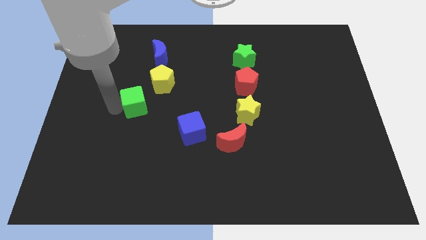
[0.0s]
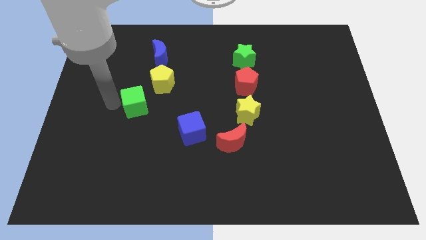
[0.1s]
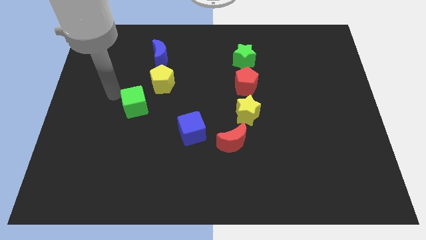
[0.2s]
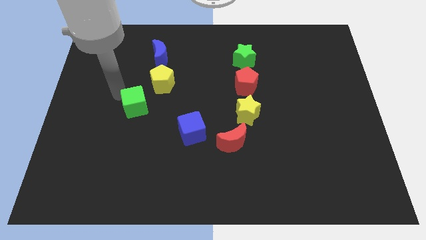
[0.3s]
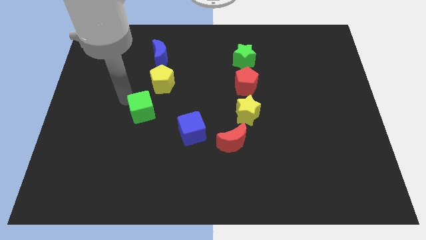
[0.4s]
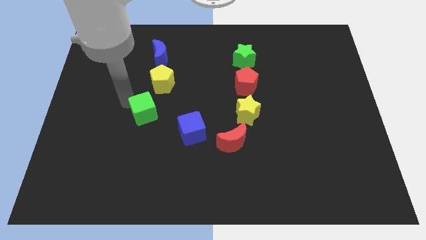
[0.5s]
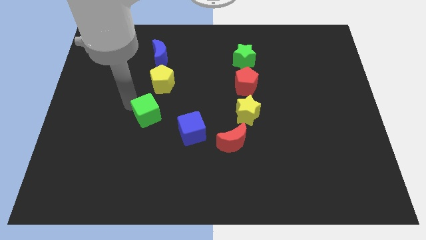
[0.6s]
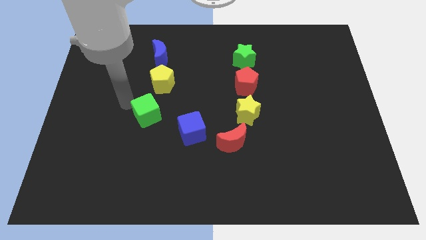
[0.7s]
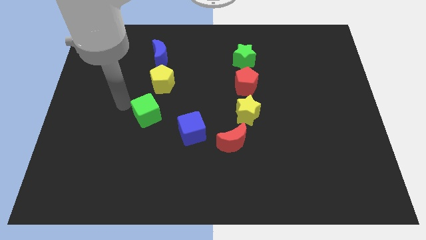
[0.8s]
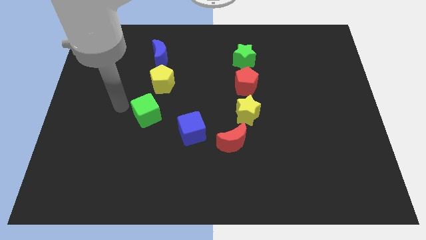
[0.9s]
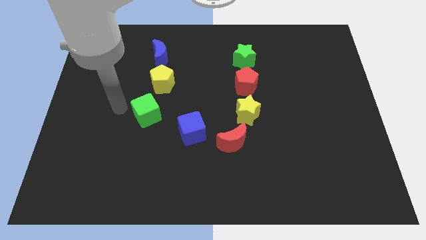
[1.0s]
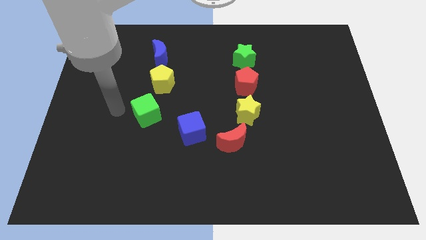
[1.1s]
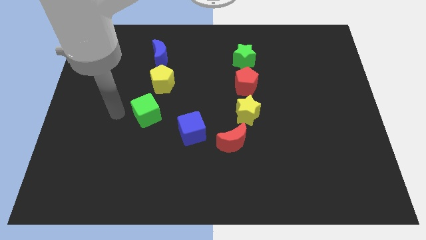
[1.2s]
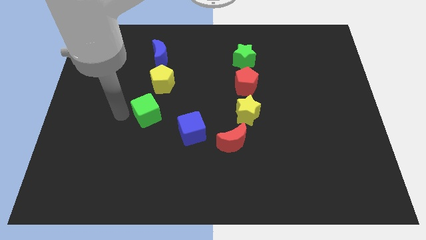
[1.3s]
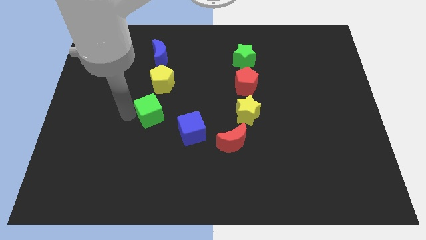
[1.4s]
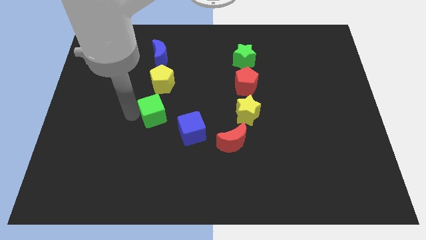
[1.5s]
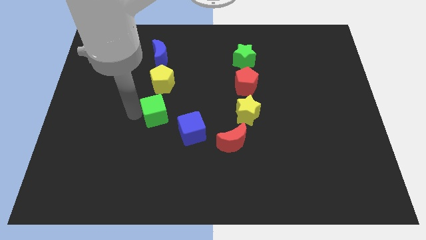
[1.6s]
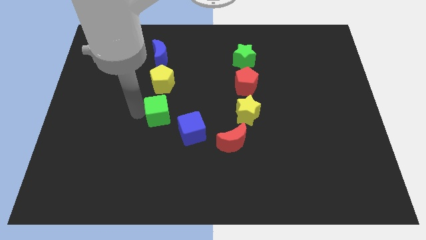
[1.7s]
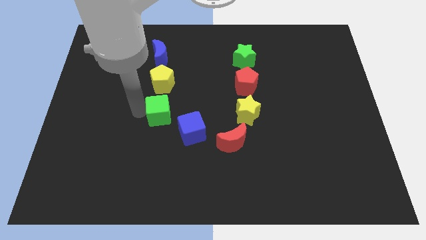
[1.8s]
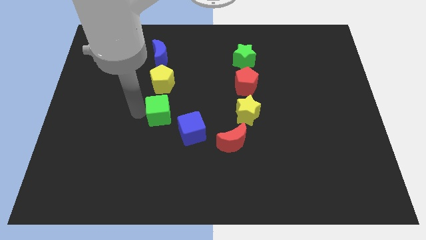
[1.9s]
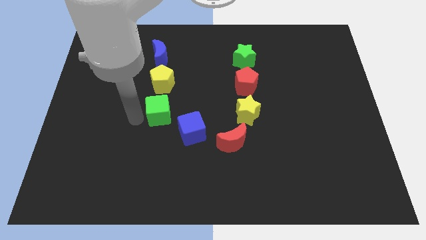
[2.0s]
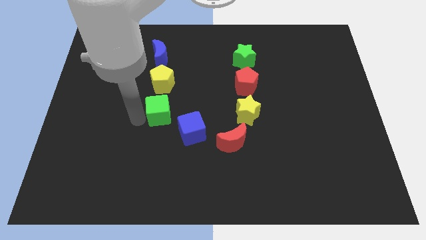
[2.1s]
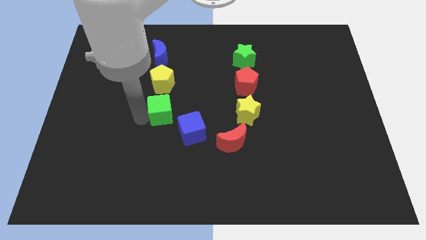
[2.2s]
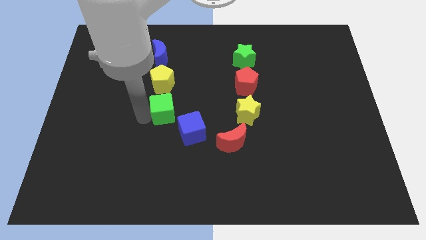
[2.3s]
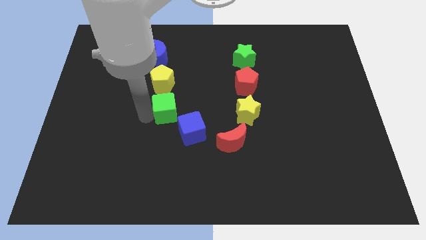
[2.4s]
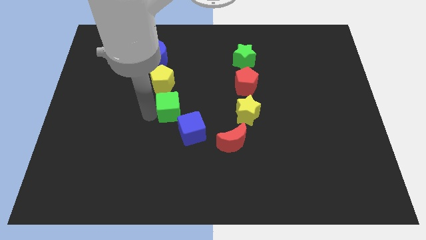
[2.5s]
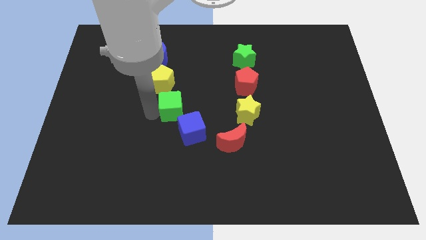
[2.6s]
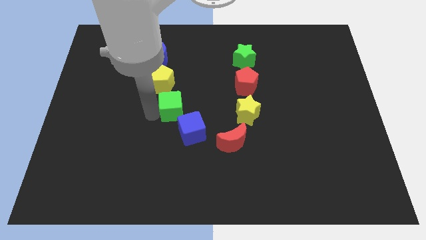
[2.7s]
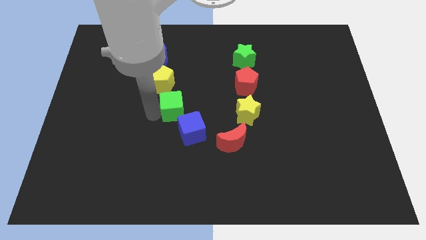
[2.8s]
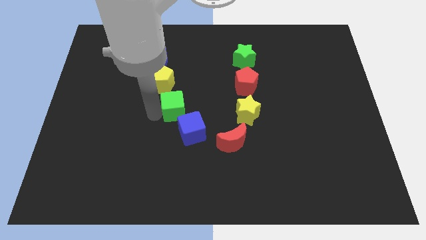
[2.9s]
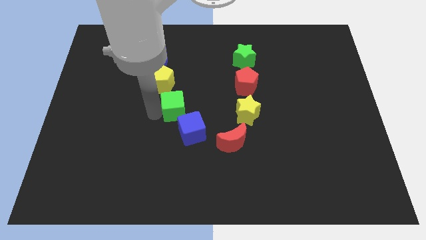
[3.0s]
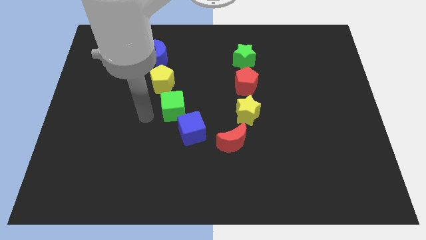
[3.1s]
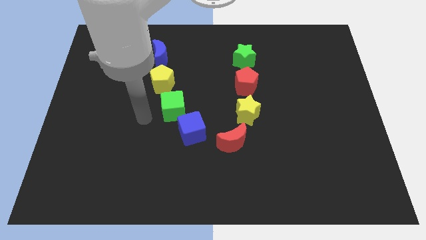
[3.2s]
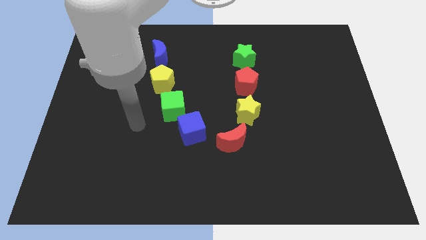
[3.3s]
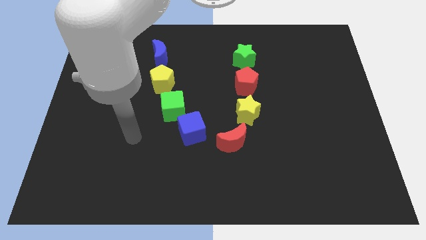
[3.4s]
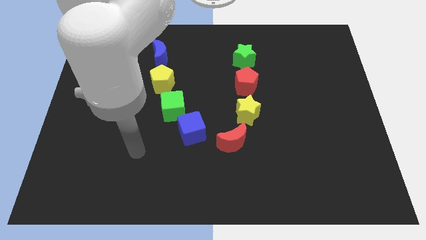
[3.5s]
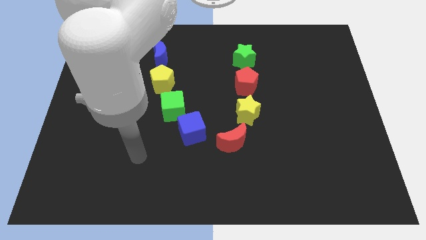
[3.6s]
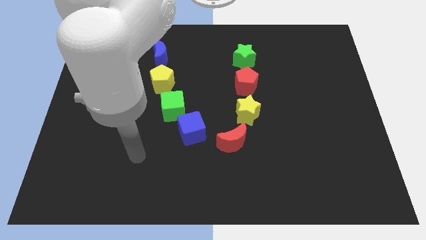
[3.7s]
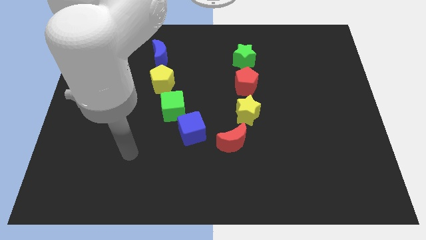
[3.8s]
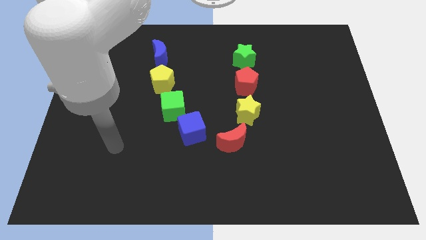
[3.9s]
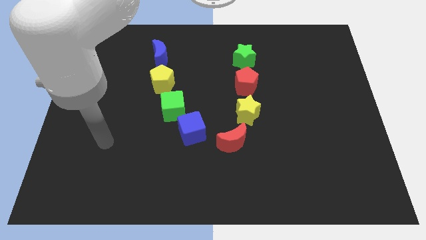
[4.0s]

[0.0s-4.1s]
place green cube in between blue cube and yellow pentagon

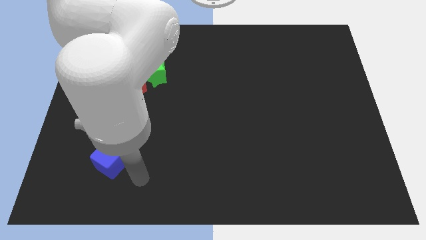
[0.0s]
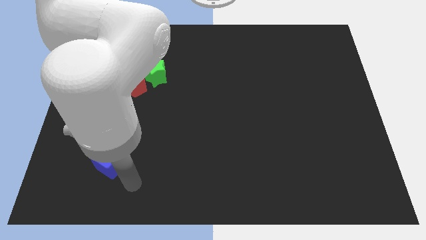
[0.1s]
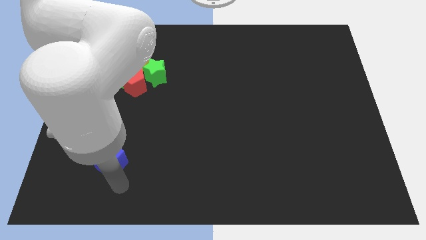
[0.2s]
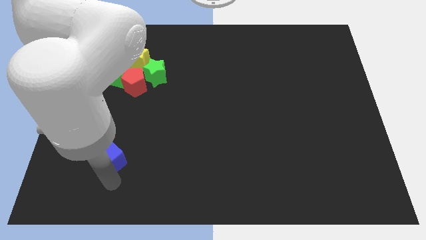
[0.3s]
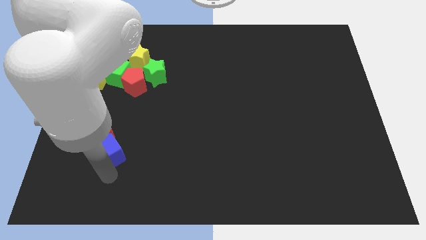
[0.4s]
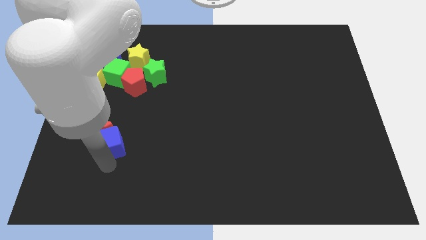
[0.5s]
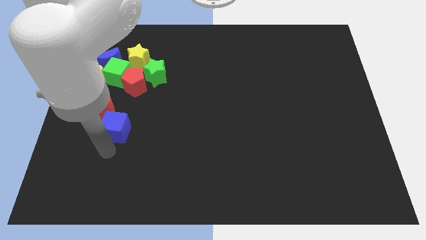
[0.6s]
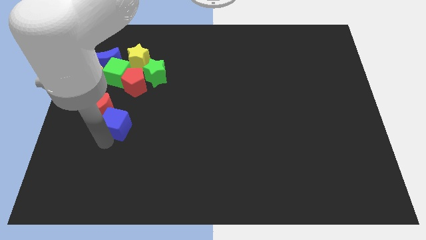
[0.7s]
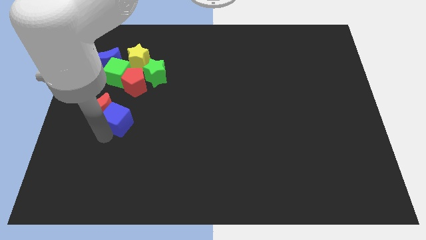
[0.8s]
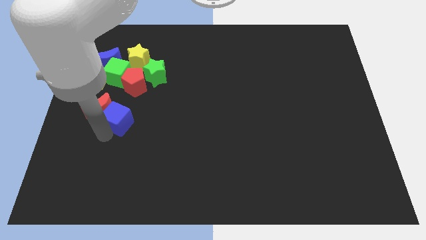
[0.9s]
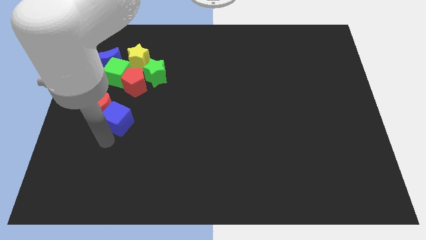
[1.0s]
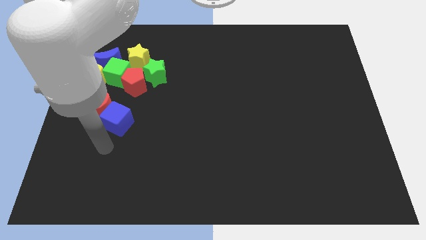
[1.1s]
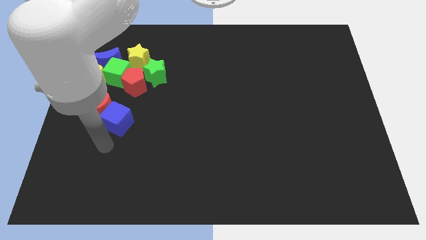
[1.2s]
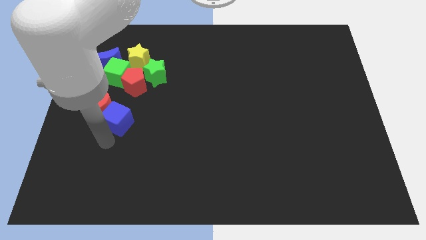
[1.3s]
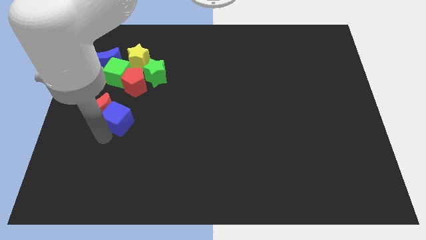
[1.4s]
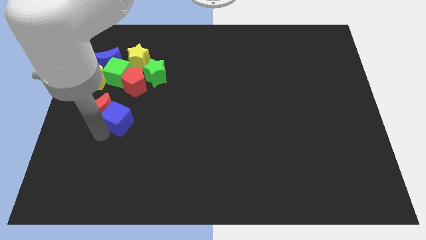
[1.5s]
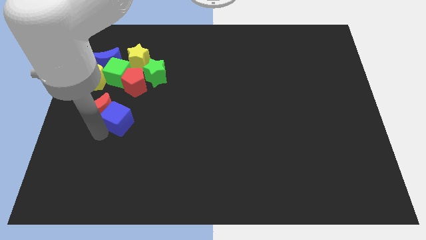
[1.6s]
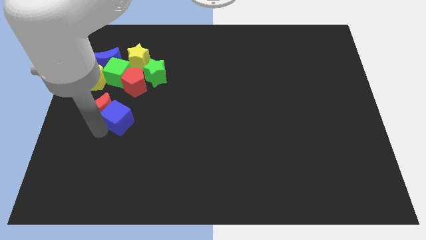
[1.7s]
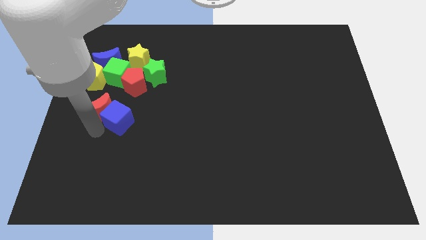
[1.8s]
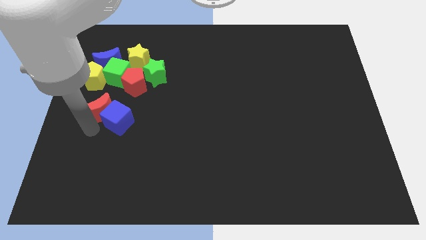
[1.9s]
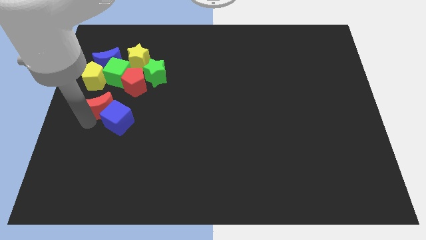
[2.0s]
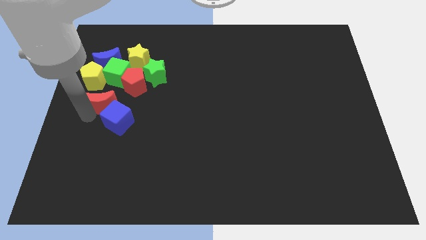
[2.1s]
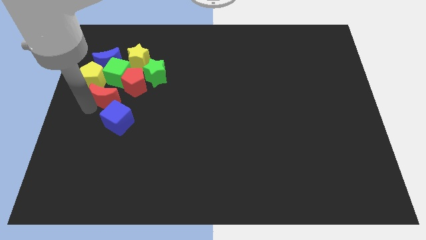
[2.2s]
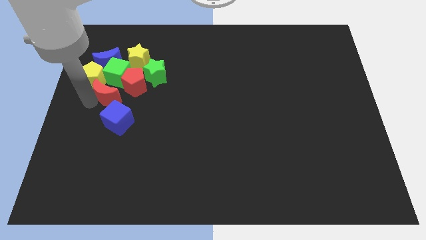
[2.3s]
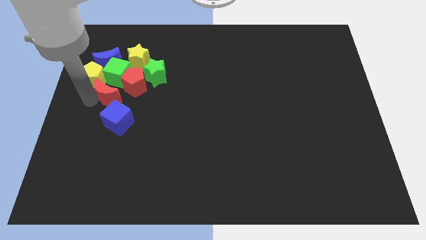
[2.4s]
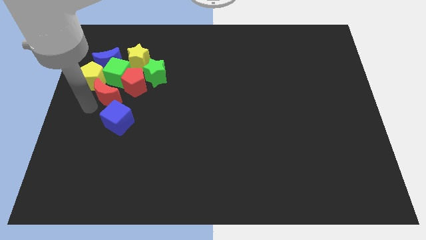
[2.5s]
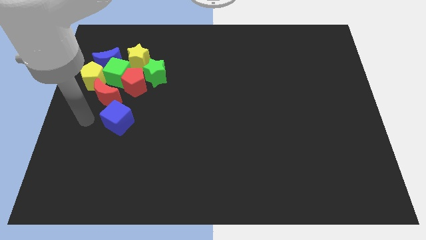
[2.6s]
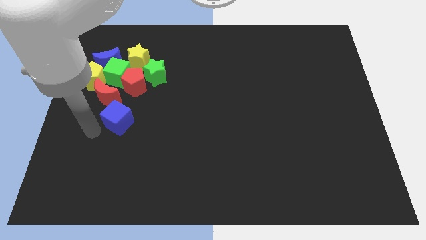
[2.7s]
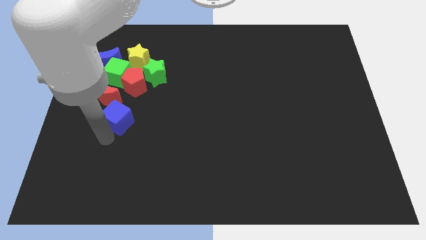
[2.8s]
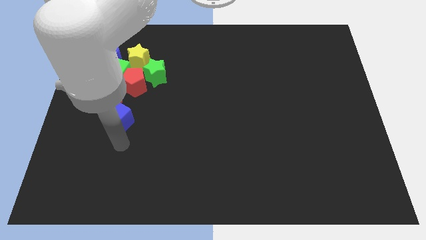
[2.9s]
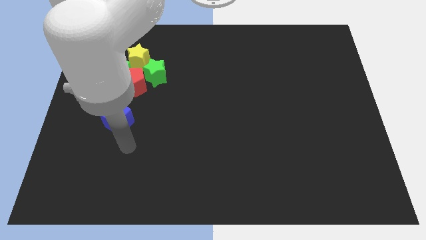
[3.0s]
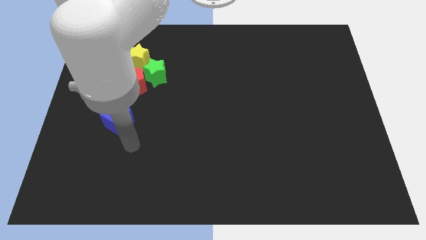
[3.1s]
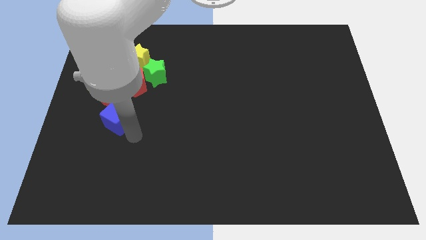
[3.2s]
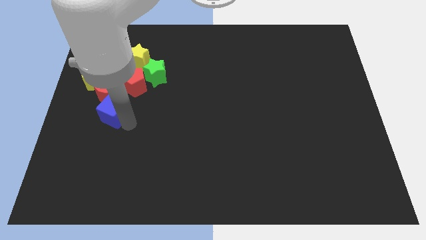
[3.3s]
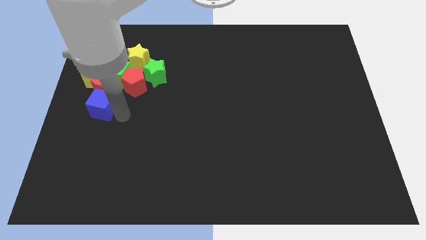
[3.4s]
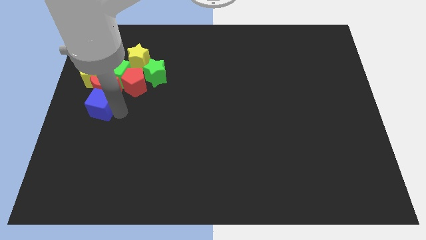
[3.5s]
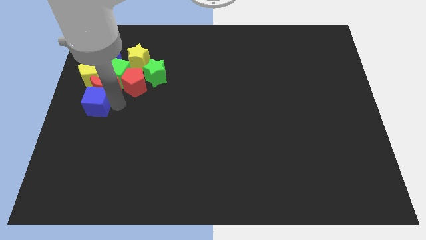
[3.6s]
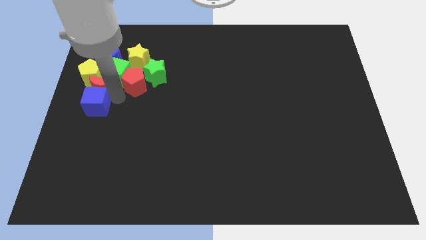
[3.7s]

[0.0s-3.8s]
push the blue cube into the red crescent

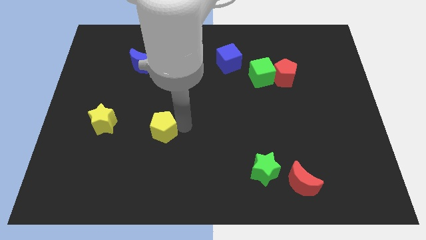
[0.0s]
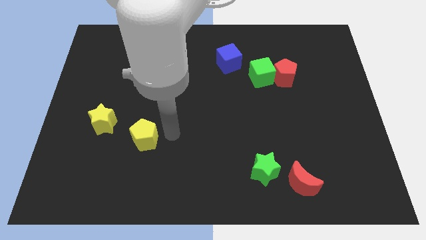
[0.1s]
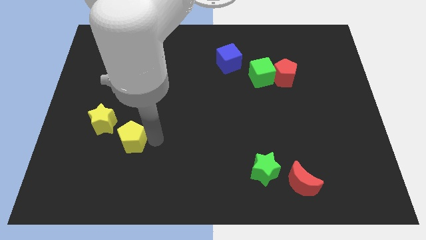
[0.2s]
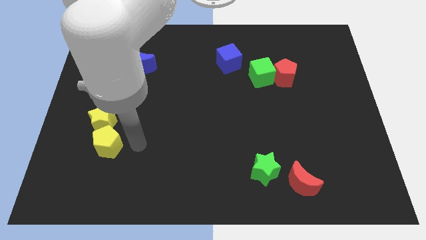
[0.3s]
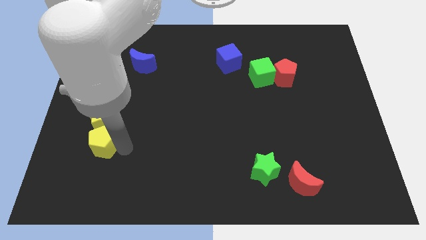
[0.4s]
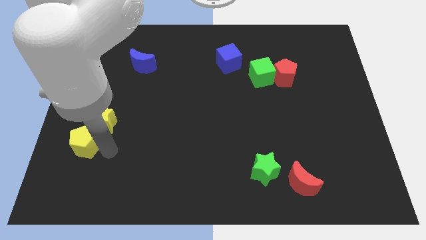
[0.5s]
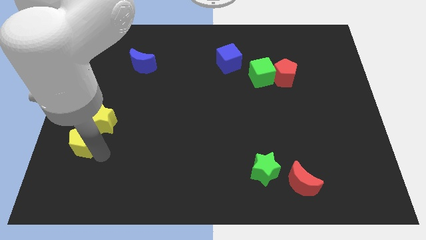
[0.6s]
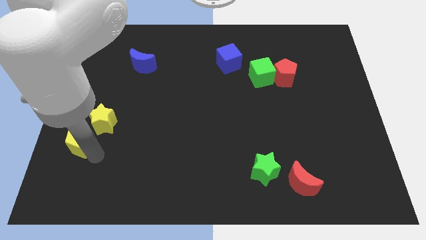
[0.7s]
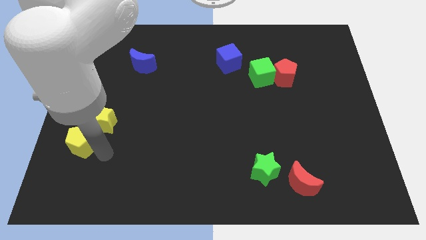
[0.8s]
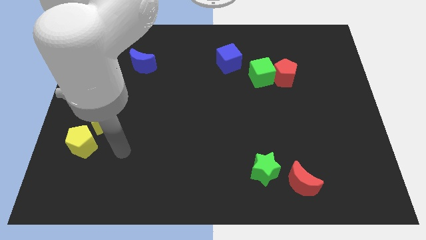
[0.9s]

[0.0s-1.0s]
place the yellow pentagon to the bottom left of the yellow star

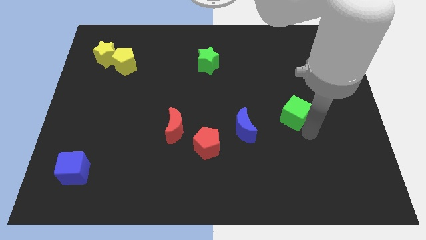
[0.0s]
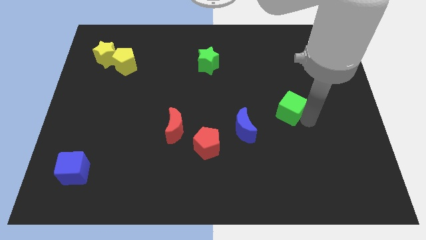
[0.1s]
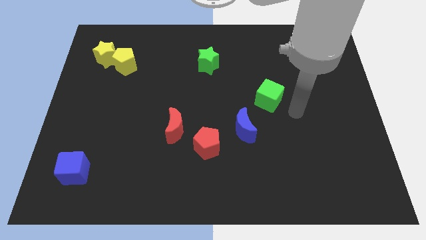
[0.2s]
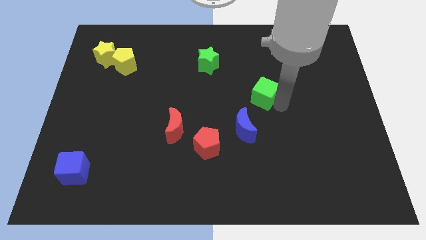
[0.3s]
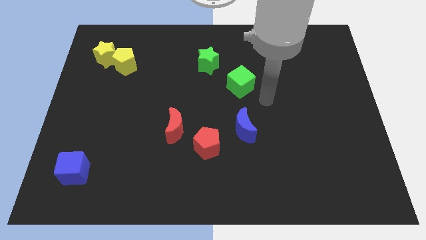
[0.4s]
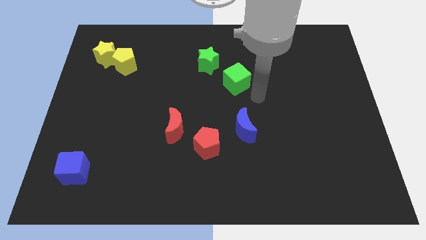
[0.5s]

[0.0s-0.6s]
move the green cube above the blue moon
